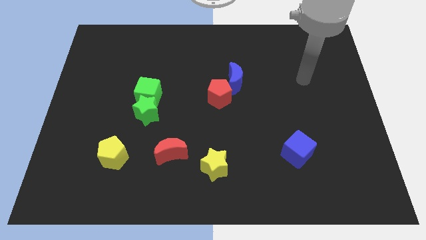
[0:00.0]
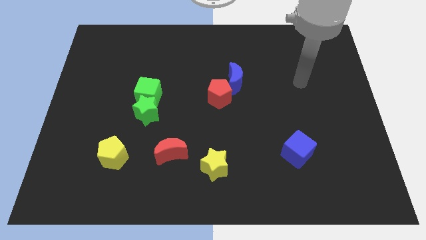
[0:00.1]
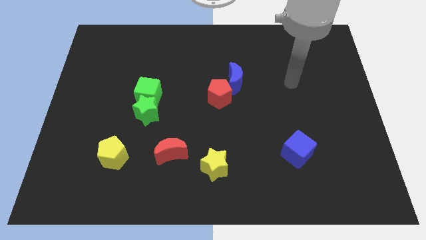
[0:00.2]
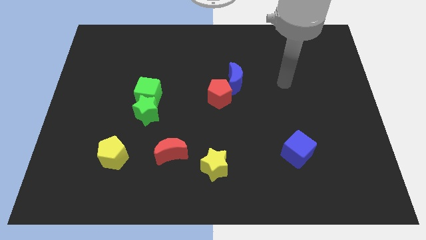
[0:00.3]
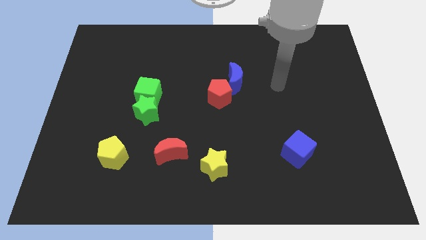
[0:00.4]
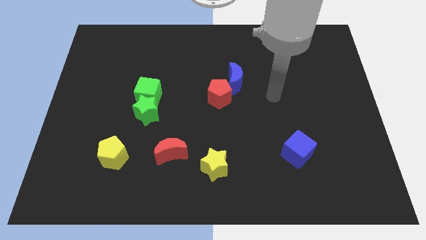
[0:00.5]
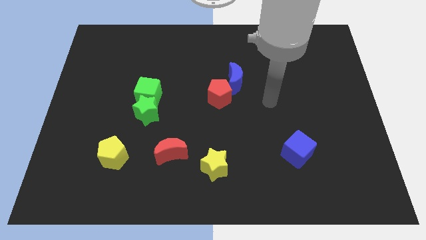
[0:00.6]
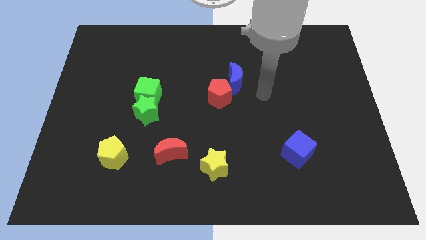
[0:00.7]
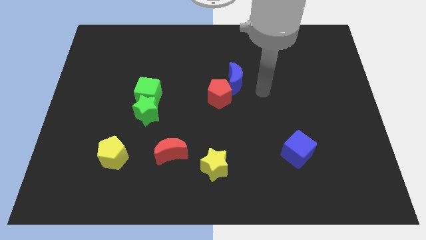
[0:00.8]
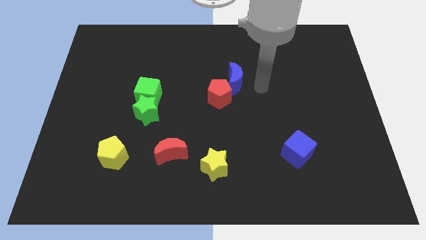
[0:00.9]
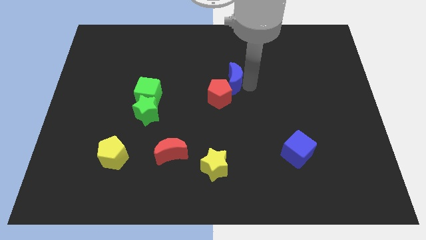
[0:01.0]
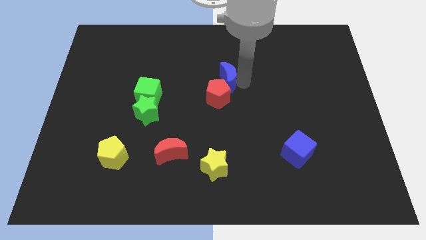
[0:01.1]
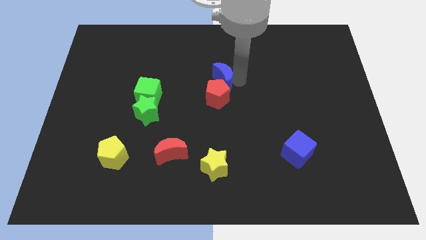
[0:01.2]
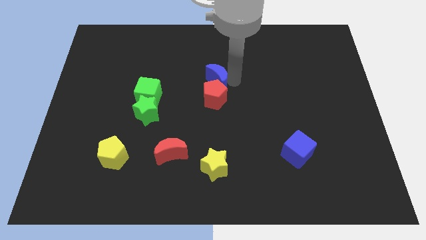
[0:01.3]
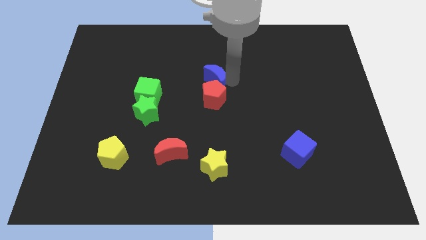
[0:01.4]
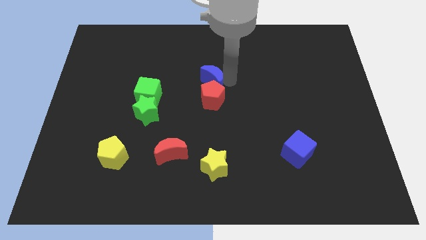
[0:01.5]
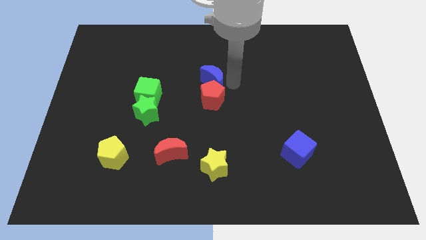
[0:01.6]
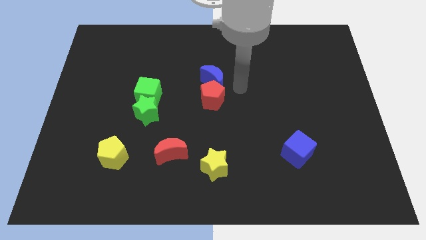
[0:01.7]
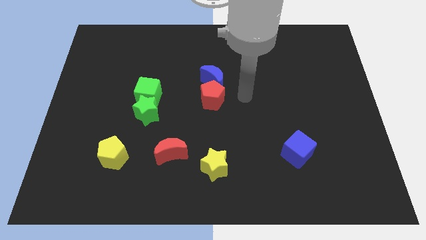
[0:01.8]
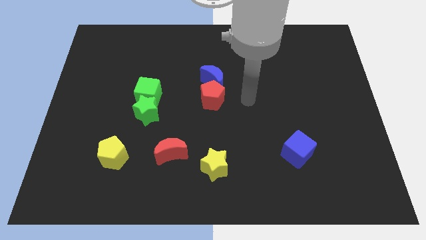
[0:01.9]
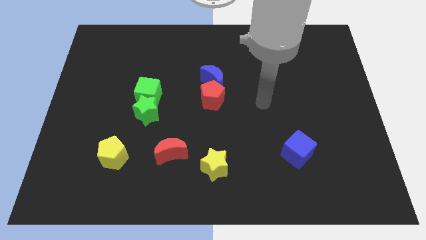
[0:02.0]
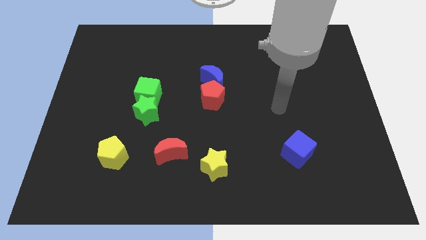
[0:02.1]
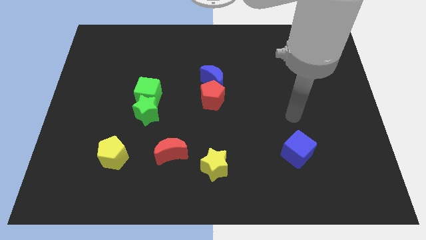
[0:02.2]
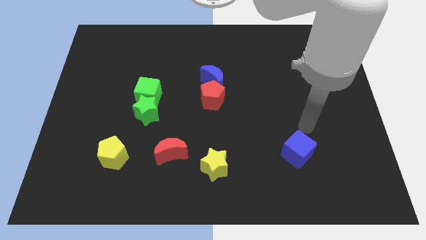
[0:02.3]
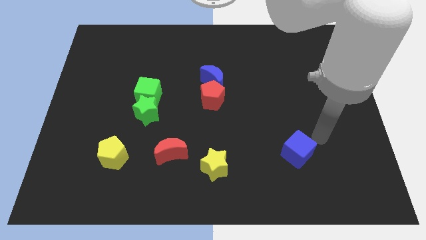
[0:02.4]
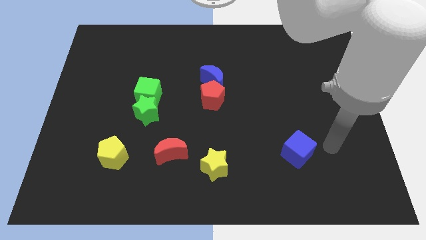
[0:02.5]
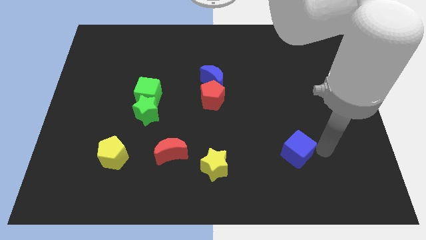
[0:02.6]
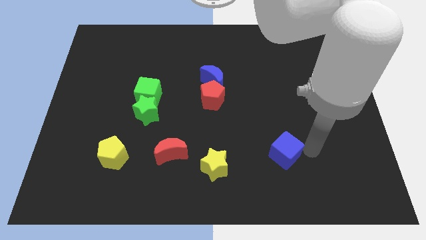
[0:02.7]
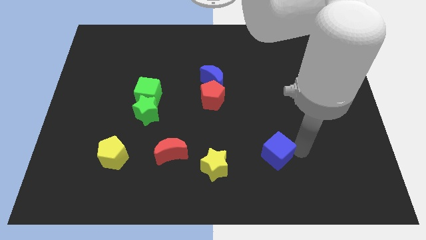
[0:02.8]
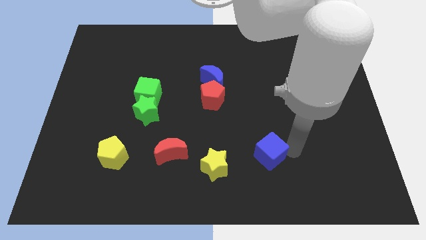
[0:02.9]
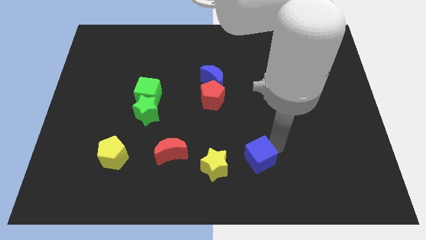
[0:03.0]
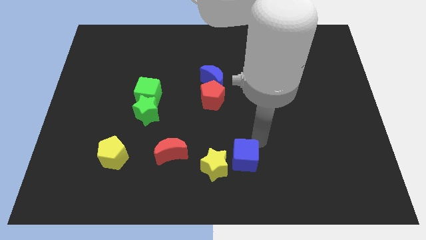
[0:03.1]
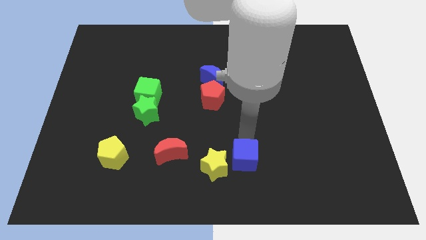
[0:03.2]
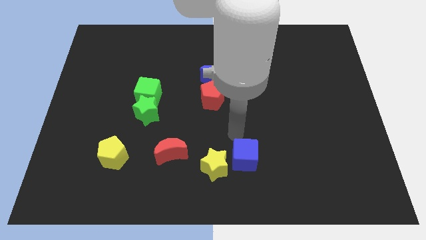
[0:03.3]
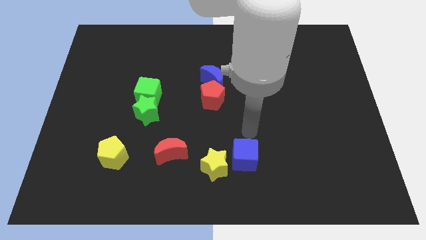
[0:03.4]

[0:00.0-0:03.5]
move blue cube near to yellow star

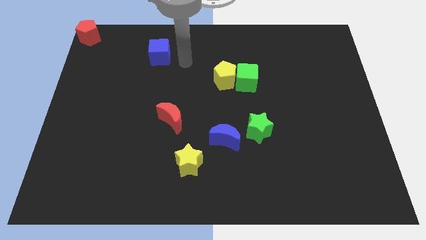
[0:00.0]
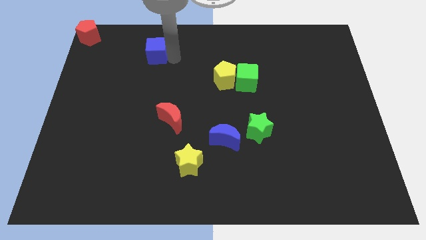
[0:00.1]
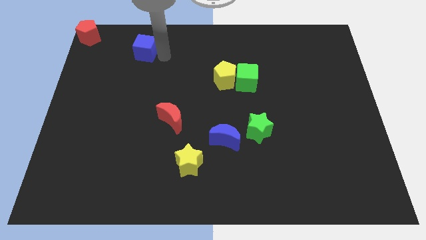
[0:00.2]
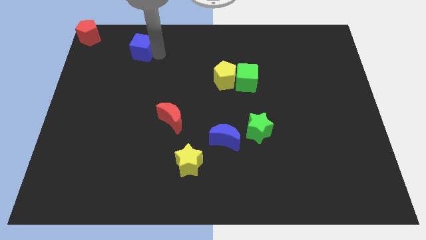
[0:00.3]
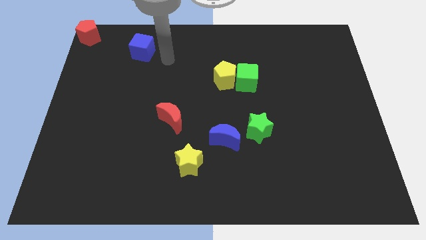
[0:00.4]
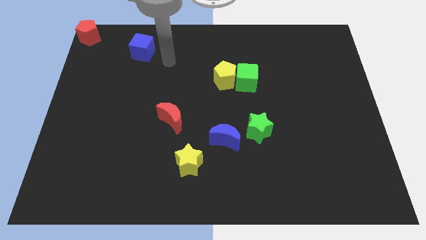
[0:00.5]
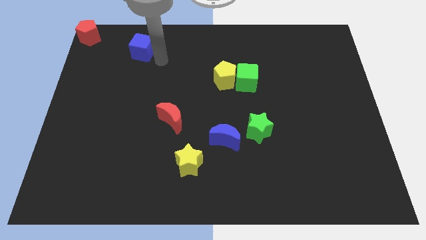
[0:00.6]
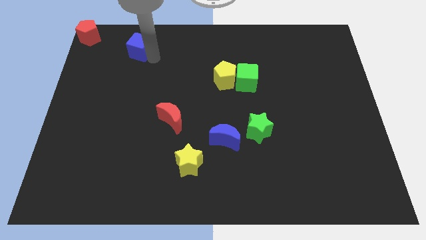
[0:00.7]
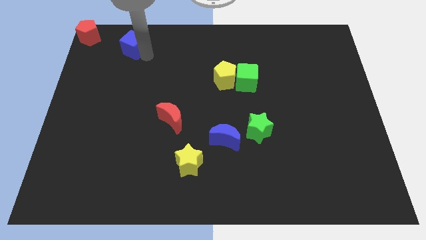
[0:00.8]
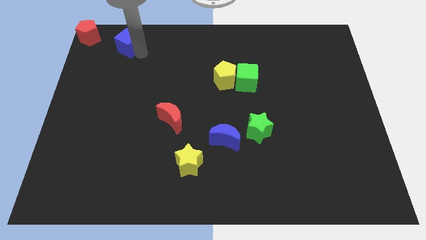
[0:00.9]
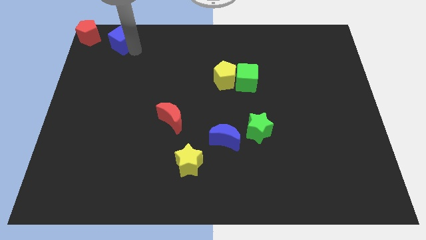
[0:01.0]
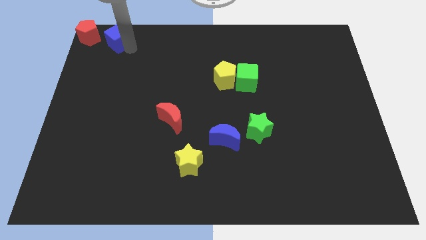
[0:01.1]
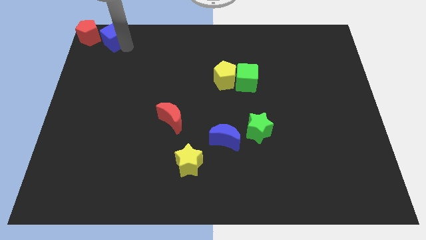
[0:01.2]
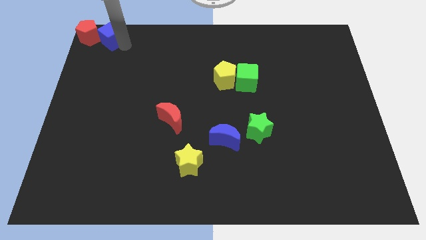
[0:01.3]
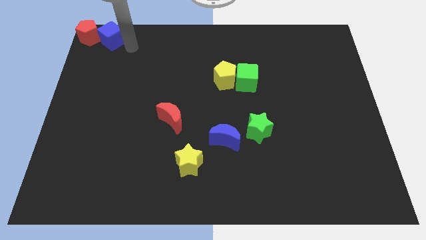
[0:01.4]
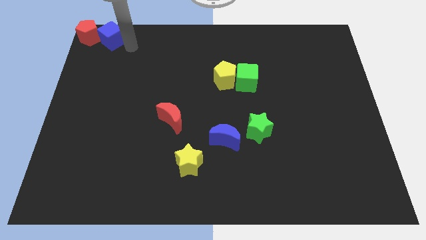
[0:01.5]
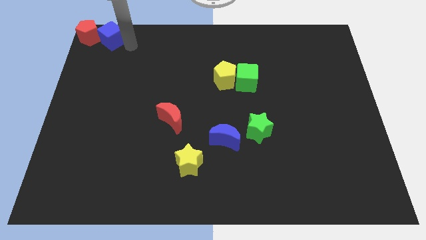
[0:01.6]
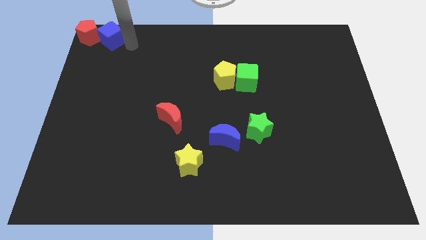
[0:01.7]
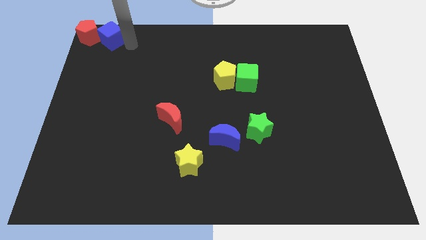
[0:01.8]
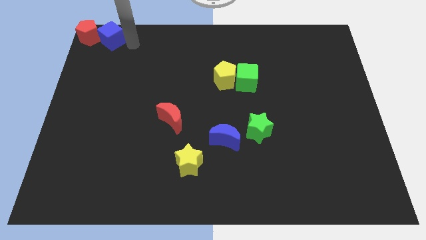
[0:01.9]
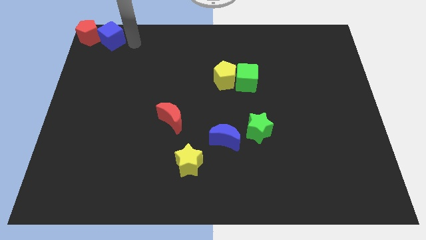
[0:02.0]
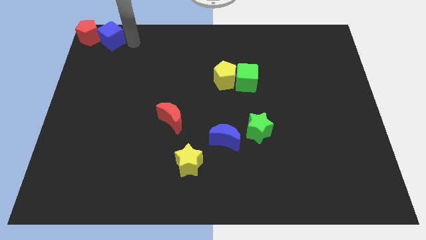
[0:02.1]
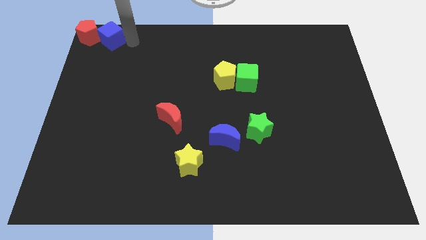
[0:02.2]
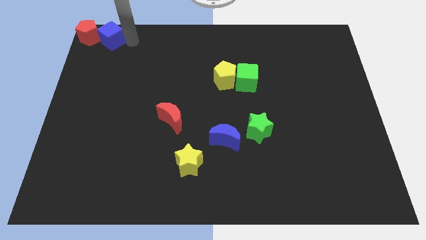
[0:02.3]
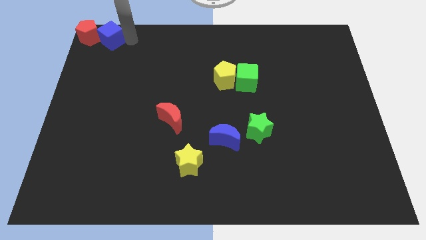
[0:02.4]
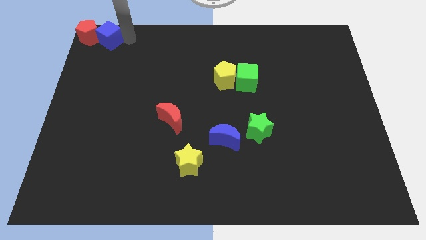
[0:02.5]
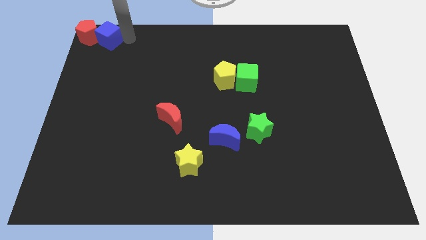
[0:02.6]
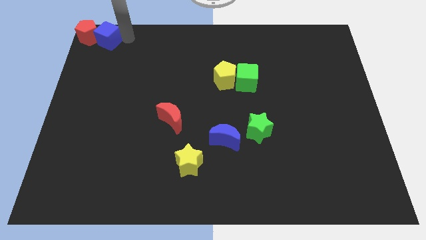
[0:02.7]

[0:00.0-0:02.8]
move the blue cube into the right side of the red pentagon

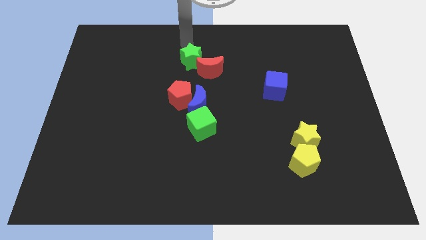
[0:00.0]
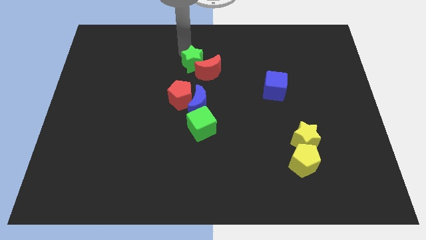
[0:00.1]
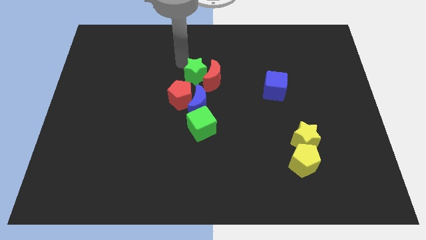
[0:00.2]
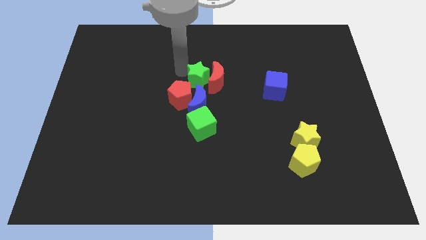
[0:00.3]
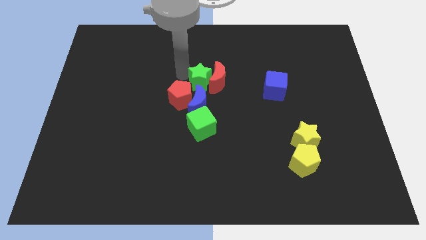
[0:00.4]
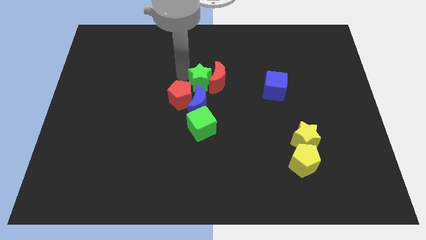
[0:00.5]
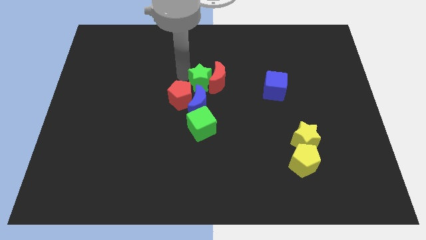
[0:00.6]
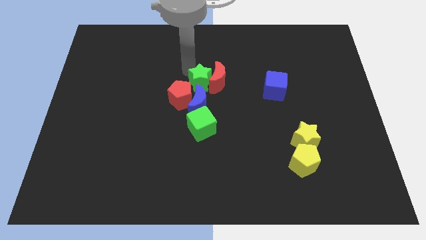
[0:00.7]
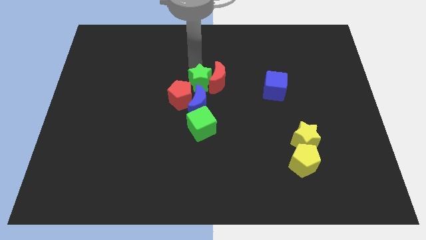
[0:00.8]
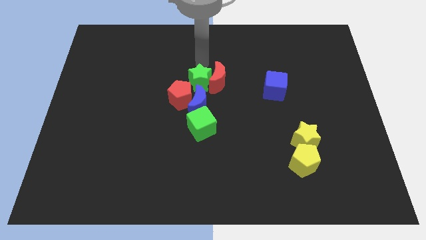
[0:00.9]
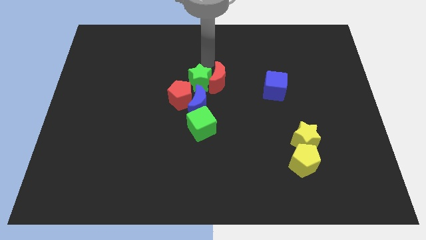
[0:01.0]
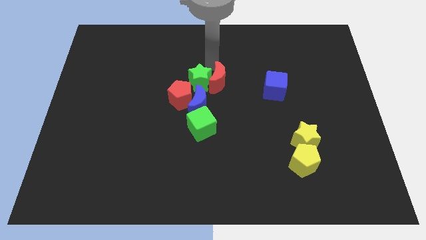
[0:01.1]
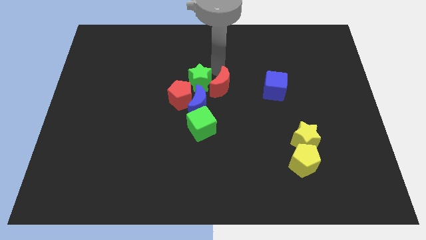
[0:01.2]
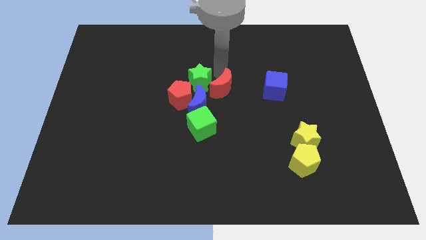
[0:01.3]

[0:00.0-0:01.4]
push green star and red moon to the center

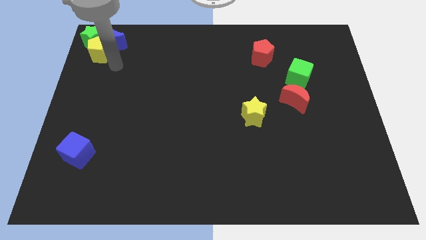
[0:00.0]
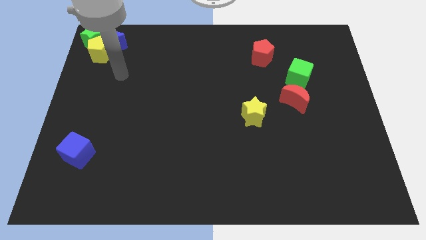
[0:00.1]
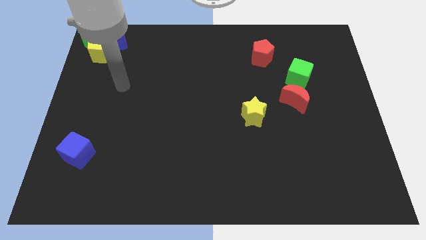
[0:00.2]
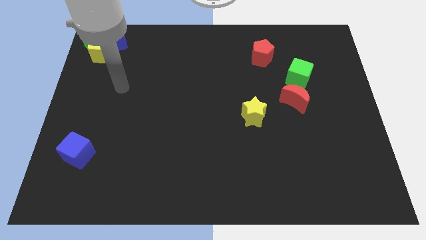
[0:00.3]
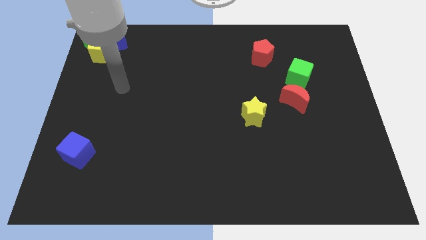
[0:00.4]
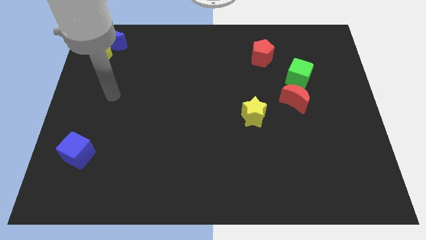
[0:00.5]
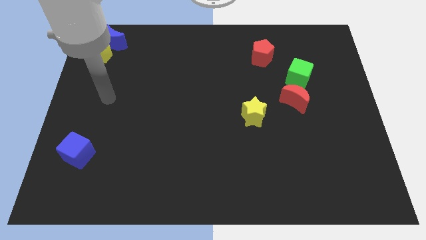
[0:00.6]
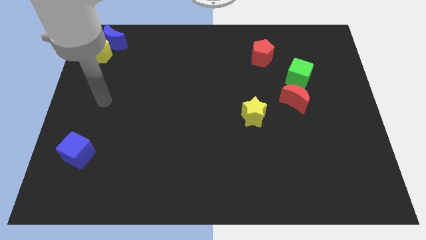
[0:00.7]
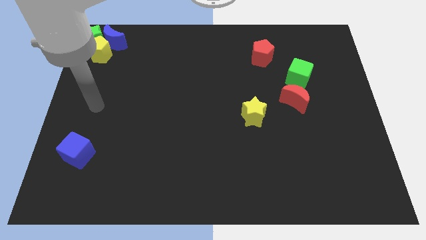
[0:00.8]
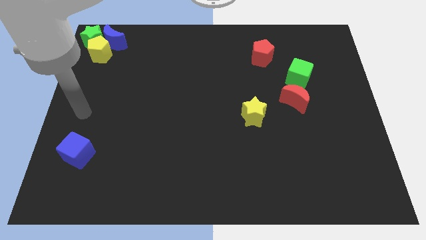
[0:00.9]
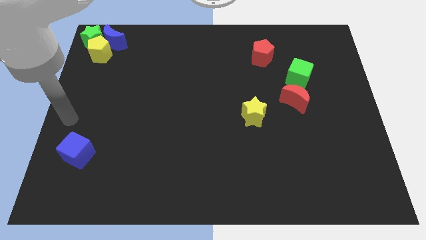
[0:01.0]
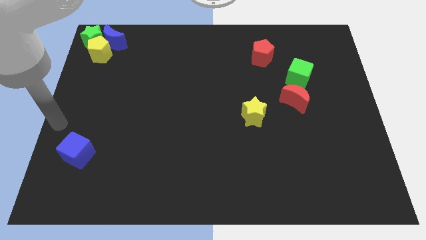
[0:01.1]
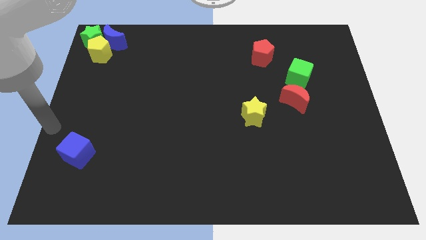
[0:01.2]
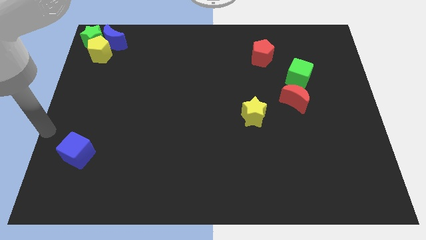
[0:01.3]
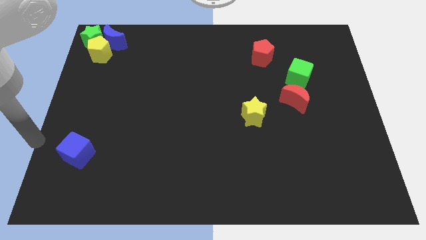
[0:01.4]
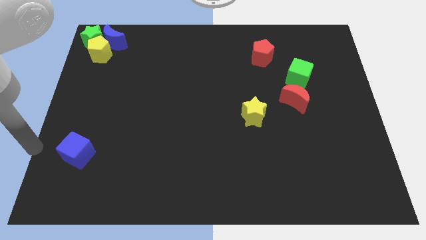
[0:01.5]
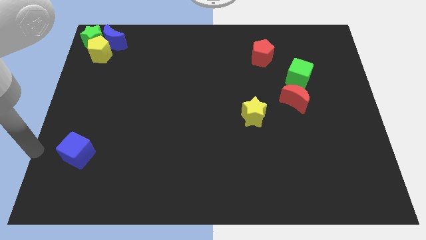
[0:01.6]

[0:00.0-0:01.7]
point your hand to the left of the blue cube
